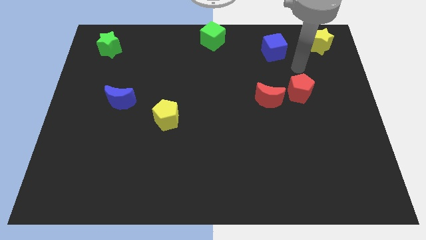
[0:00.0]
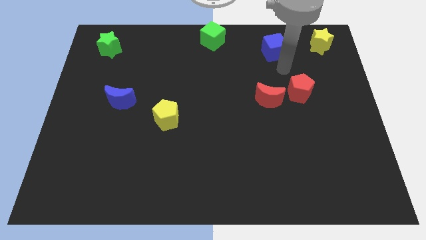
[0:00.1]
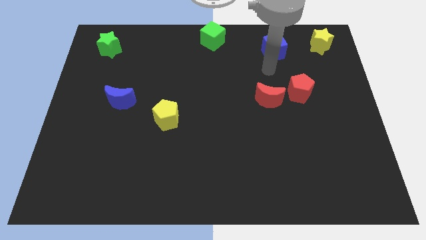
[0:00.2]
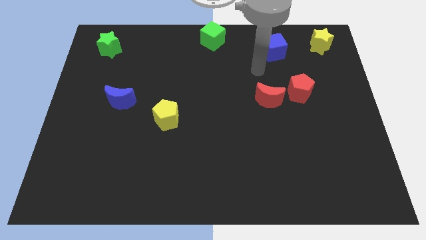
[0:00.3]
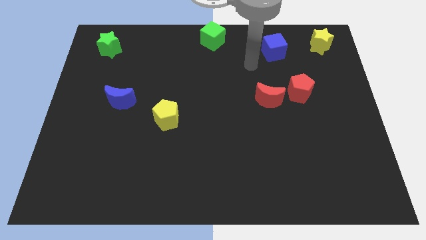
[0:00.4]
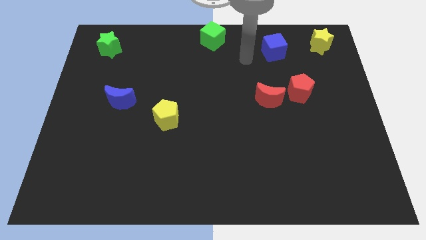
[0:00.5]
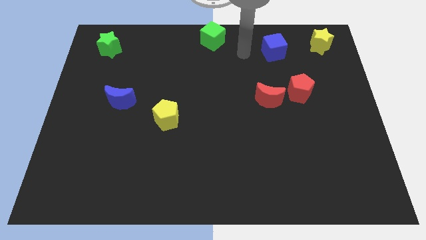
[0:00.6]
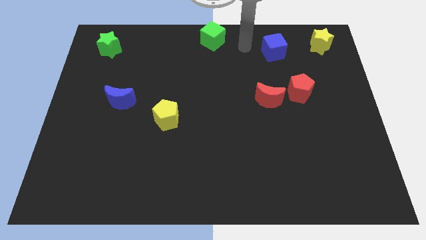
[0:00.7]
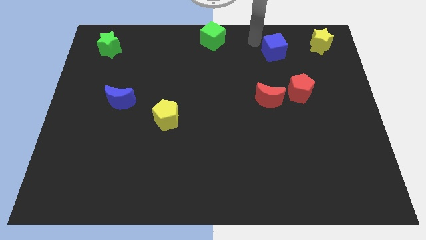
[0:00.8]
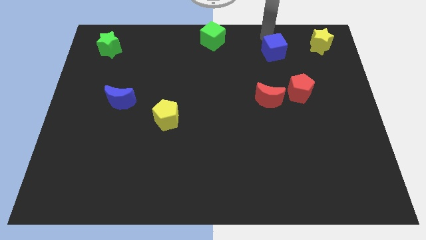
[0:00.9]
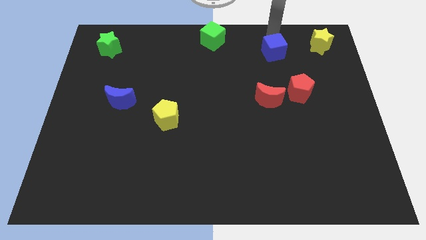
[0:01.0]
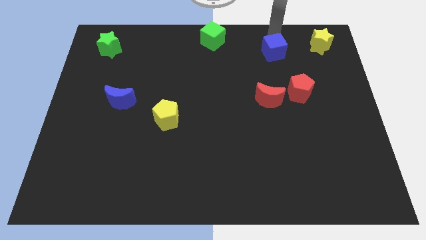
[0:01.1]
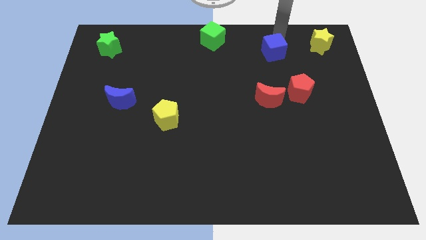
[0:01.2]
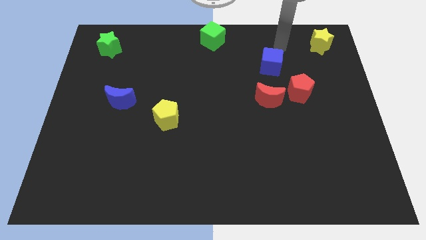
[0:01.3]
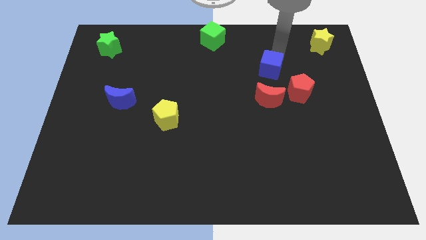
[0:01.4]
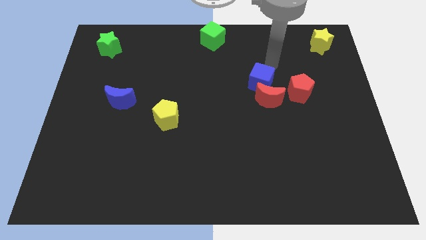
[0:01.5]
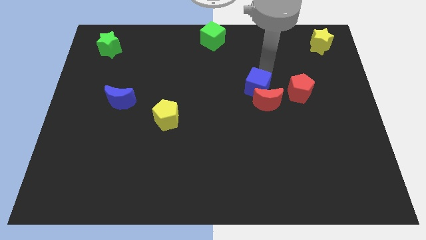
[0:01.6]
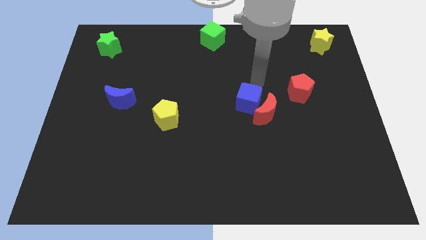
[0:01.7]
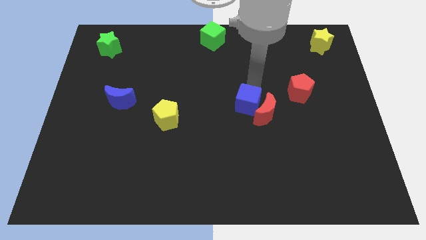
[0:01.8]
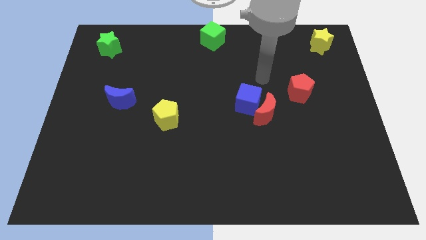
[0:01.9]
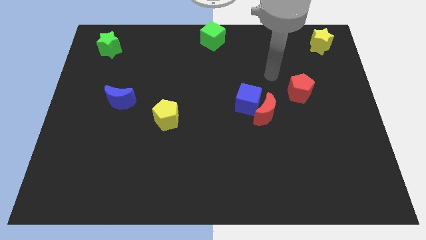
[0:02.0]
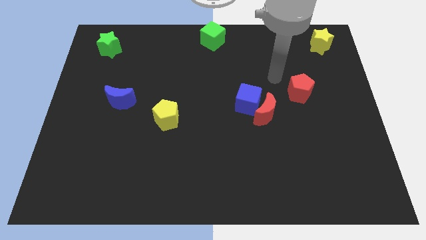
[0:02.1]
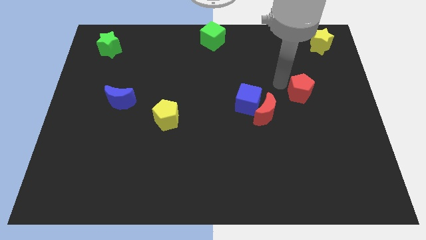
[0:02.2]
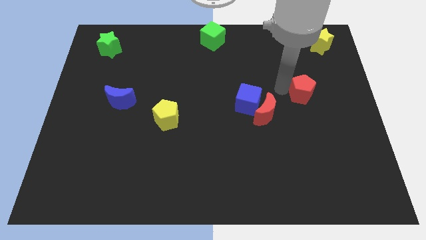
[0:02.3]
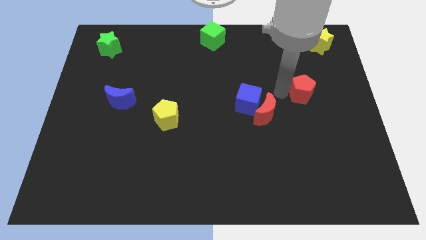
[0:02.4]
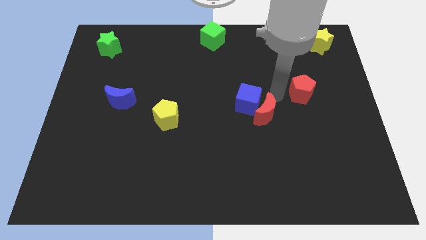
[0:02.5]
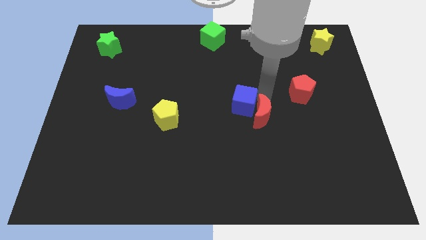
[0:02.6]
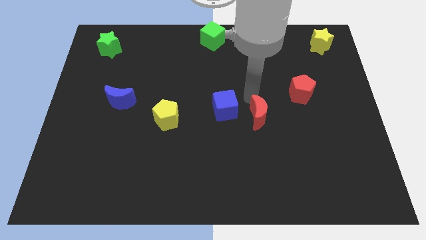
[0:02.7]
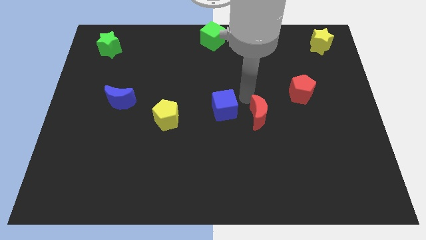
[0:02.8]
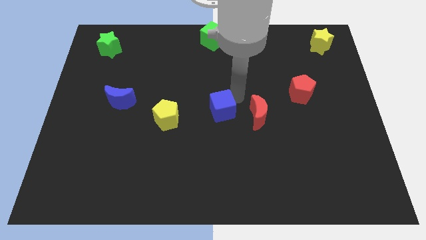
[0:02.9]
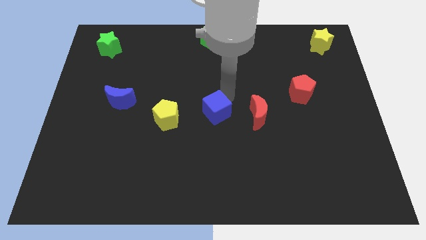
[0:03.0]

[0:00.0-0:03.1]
place blue cube to the left of red moon

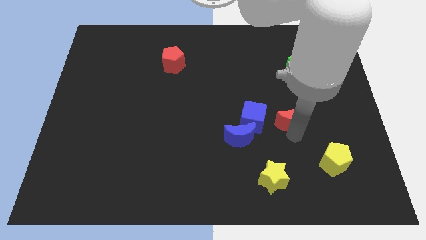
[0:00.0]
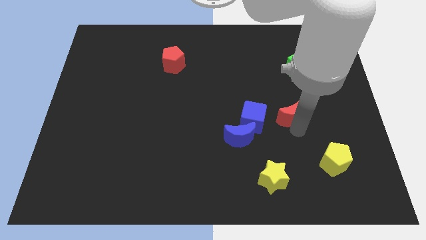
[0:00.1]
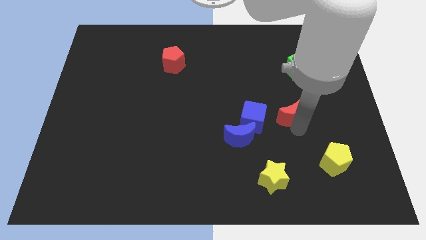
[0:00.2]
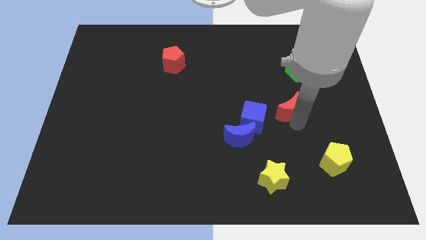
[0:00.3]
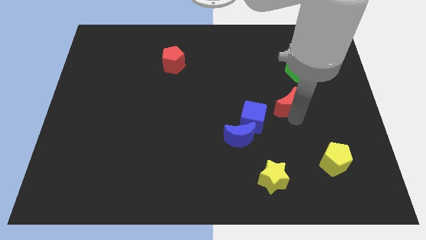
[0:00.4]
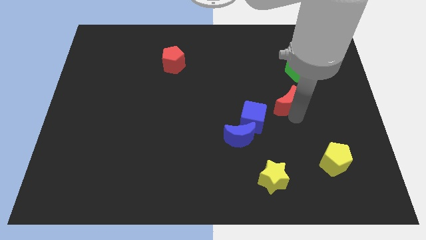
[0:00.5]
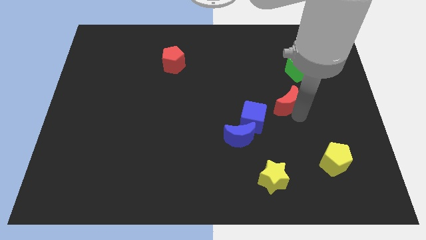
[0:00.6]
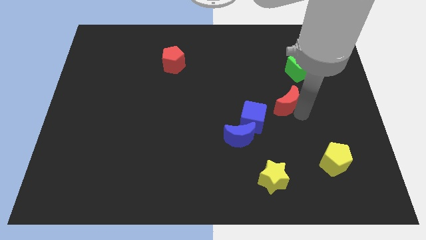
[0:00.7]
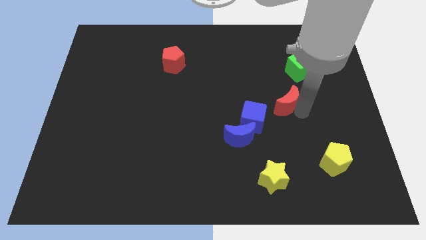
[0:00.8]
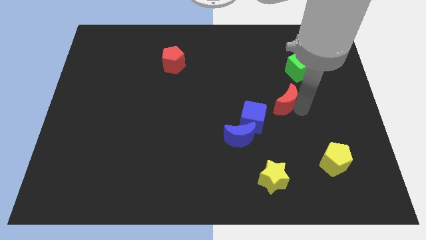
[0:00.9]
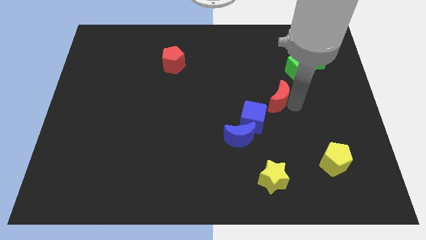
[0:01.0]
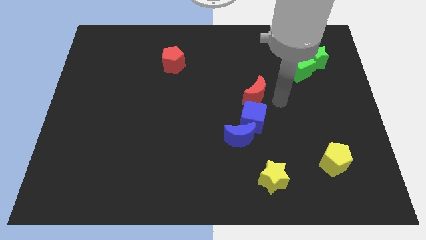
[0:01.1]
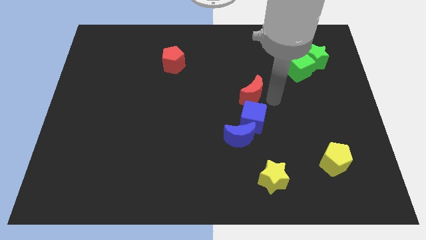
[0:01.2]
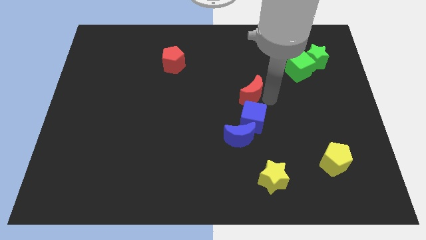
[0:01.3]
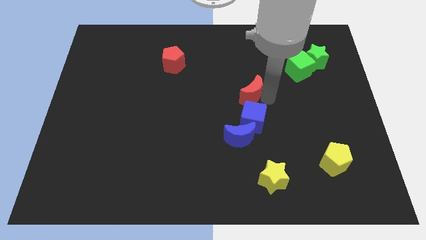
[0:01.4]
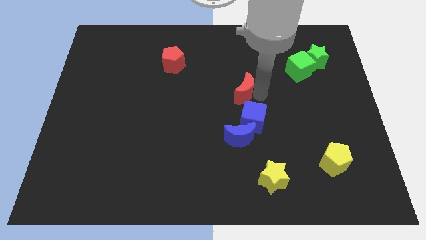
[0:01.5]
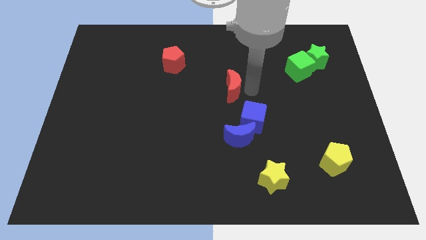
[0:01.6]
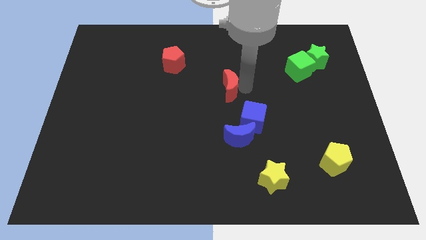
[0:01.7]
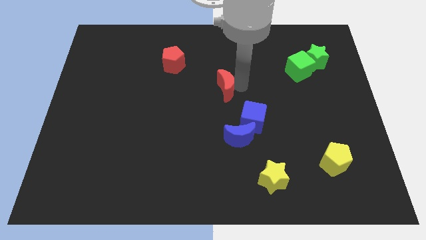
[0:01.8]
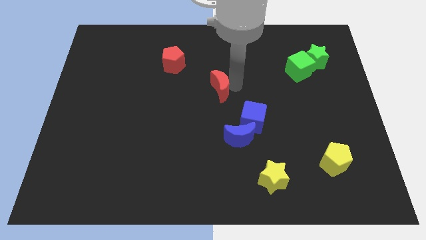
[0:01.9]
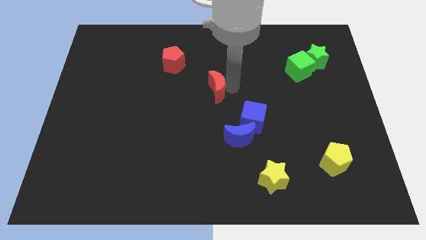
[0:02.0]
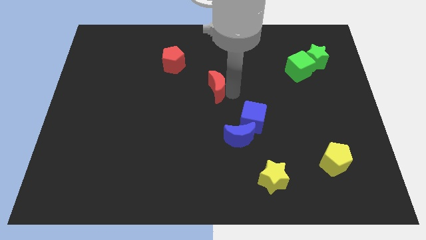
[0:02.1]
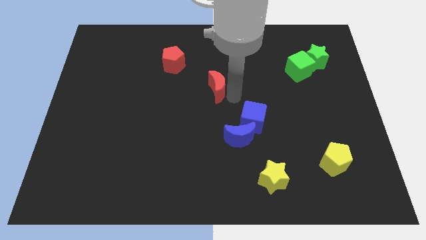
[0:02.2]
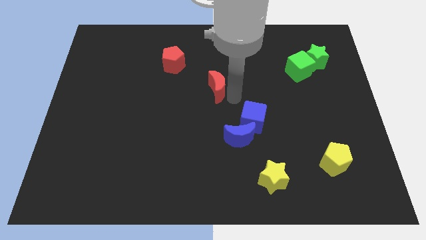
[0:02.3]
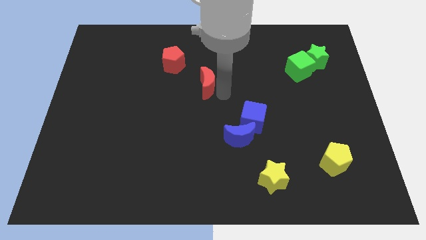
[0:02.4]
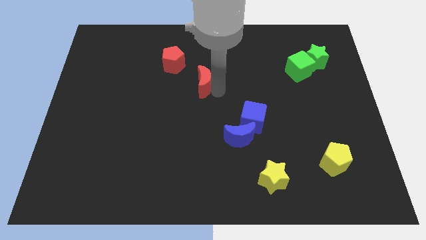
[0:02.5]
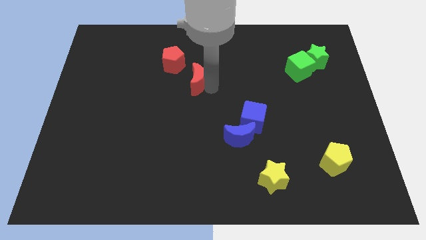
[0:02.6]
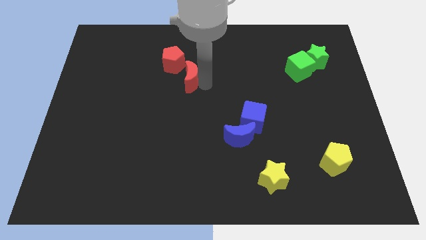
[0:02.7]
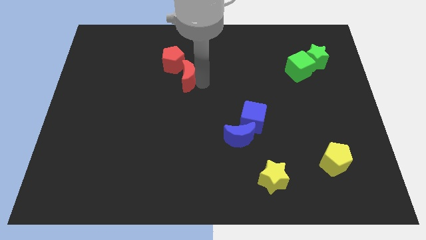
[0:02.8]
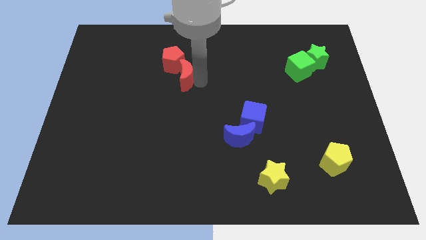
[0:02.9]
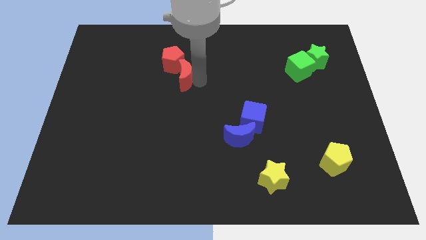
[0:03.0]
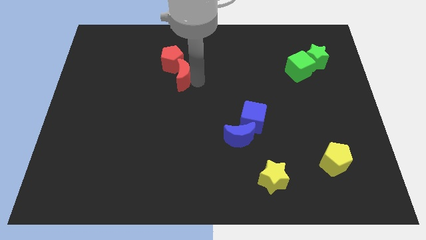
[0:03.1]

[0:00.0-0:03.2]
push red moon towards red top left

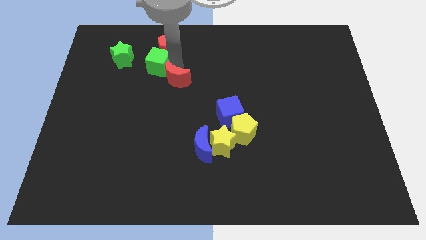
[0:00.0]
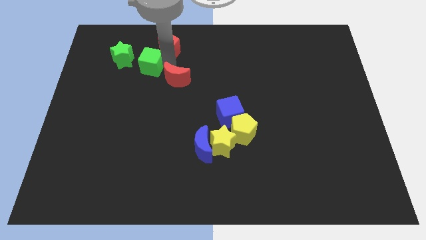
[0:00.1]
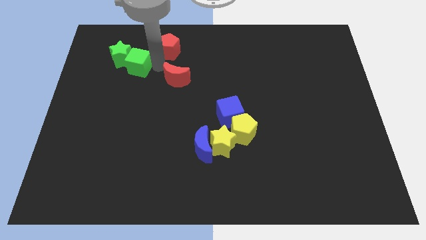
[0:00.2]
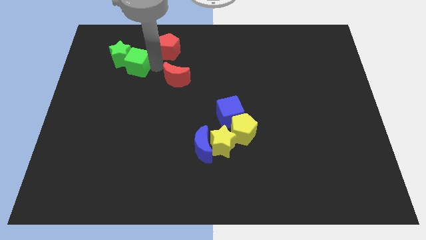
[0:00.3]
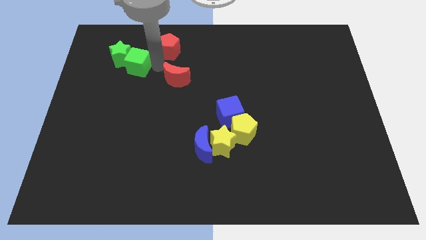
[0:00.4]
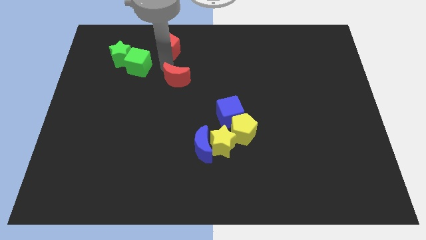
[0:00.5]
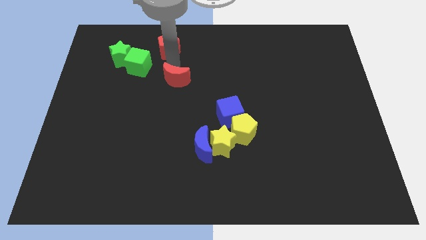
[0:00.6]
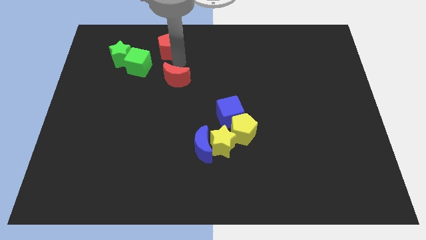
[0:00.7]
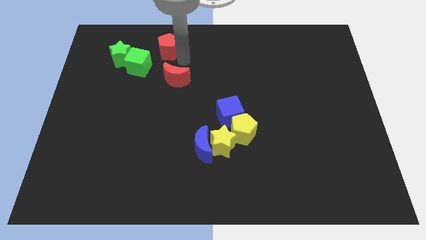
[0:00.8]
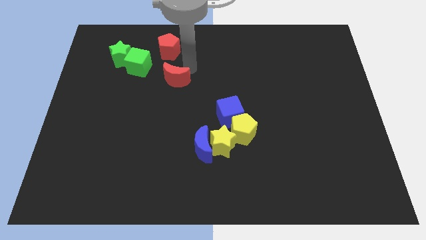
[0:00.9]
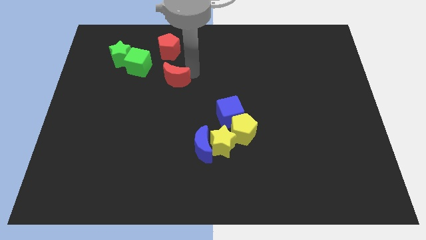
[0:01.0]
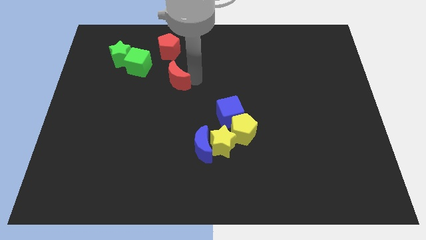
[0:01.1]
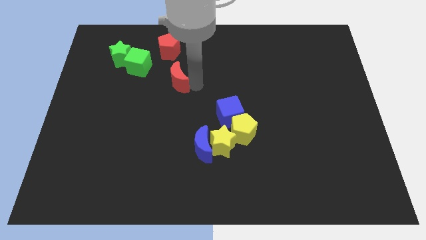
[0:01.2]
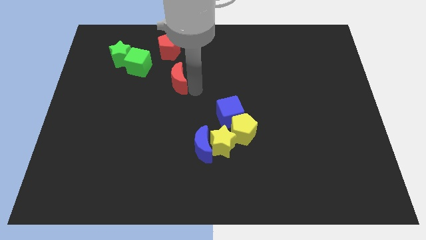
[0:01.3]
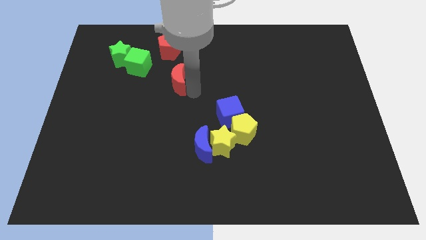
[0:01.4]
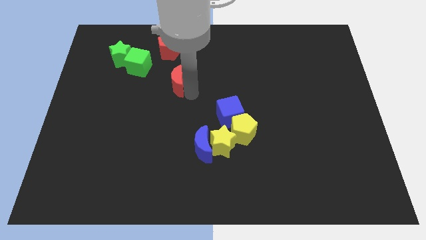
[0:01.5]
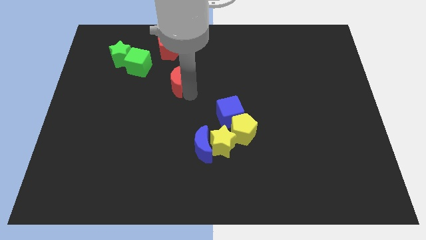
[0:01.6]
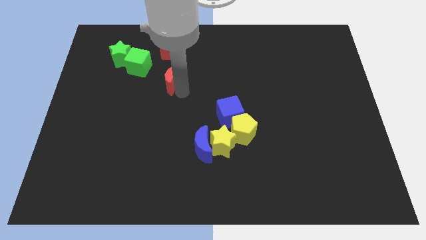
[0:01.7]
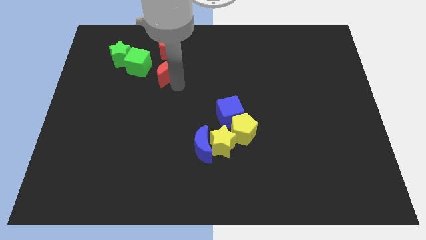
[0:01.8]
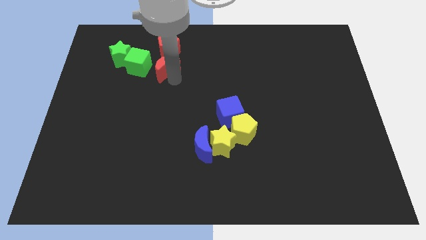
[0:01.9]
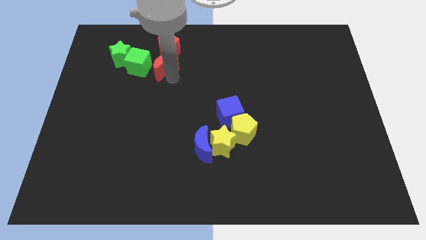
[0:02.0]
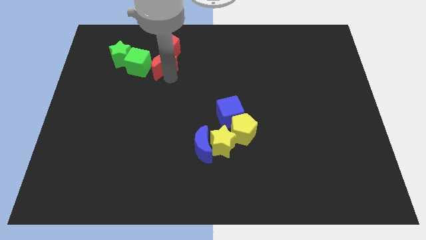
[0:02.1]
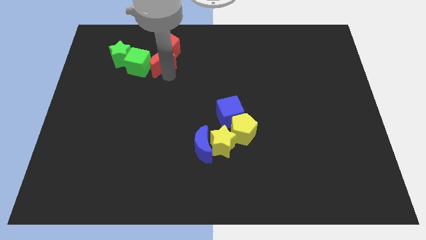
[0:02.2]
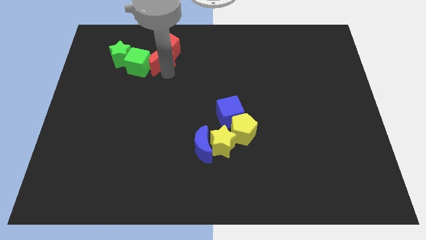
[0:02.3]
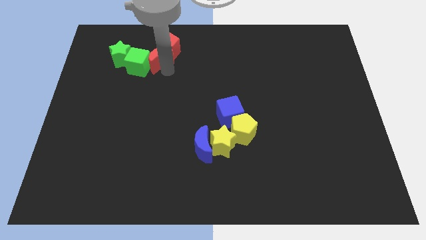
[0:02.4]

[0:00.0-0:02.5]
push the red moon in between the red pentagon and green cube
